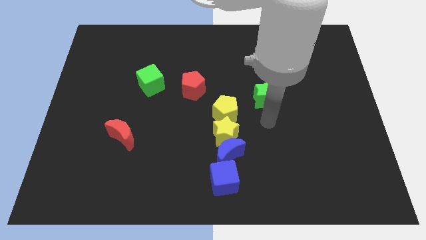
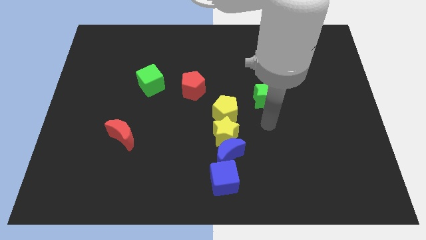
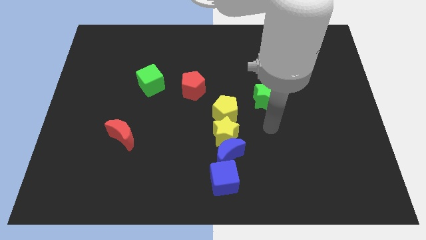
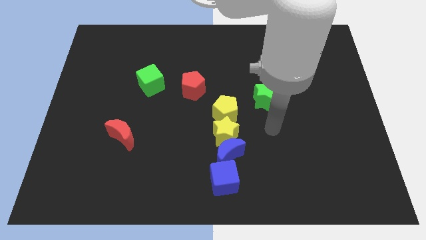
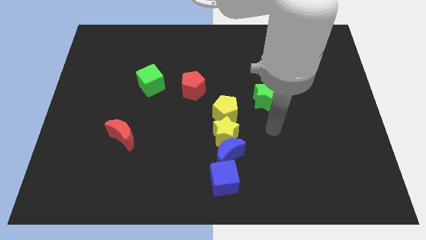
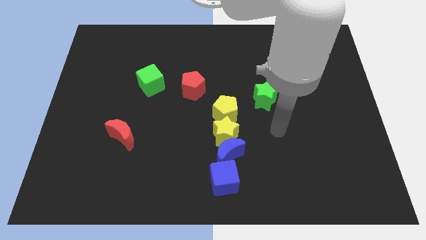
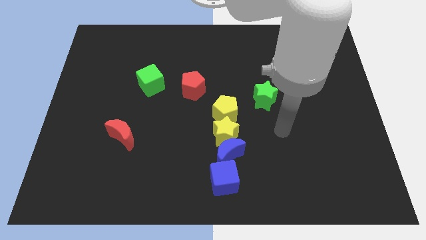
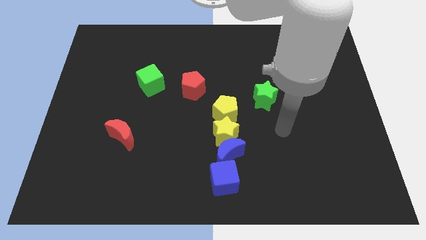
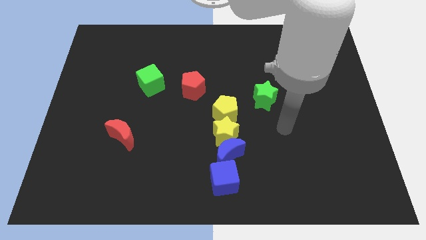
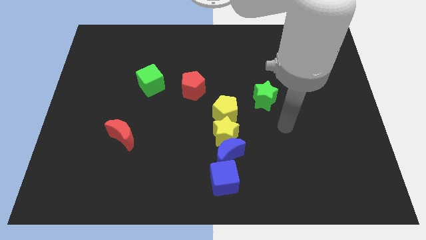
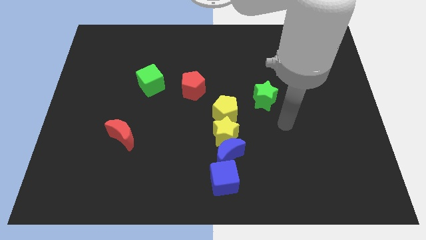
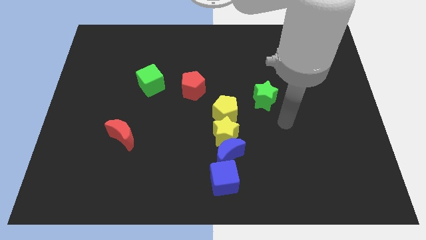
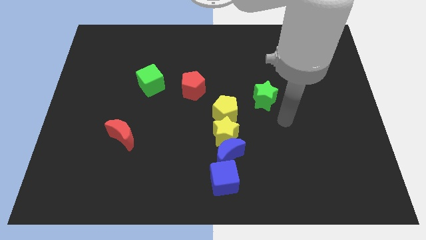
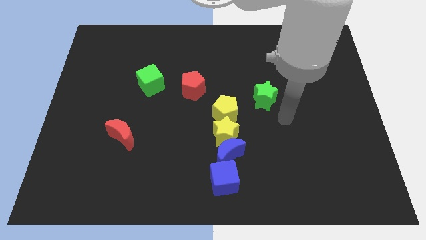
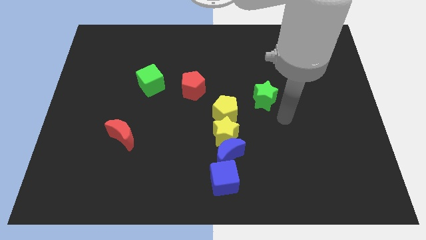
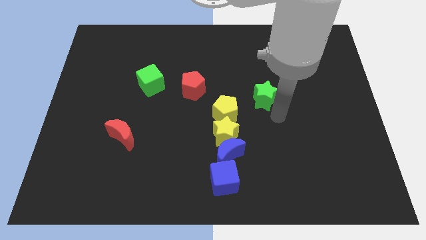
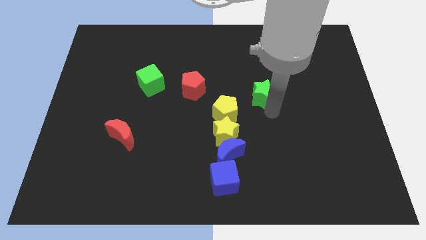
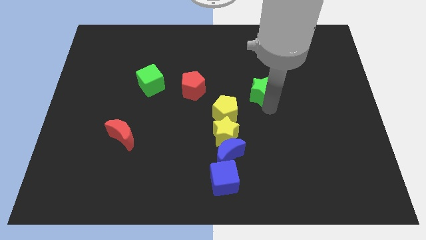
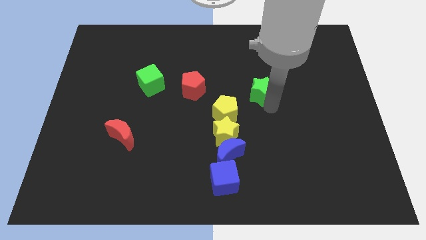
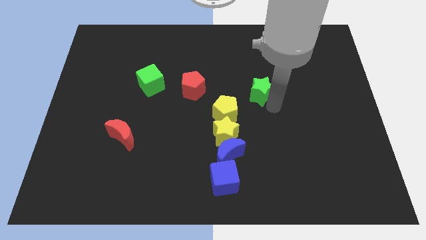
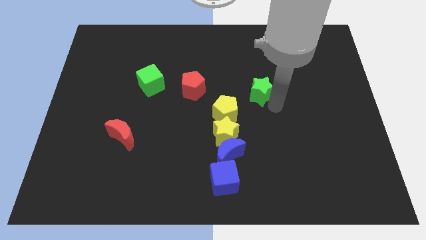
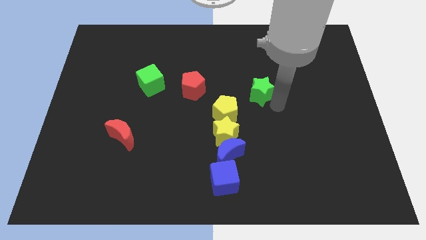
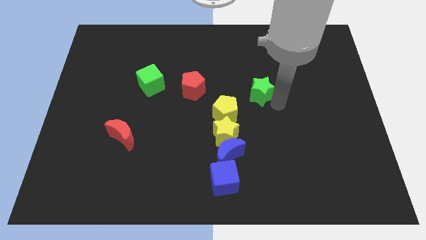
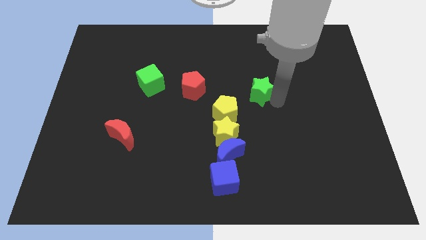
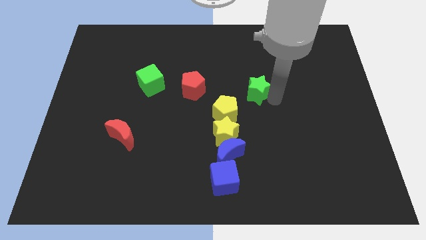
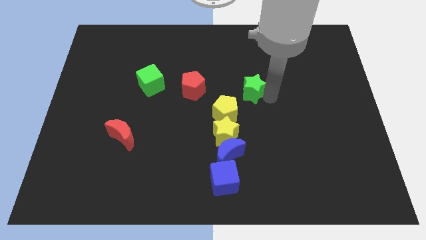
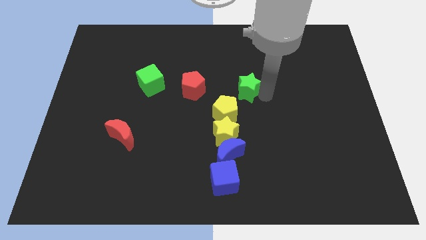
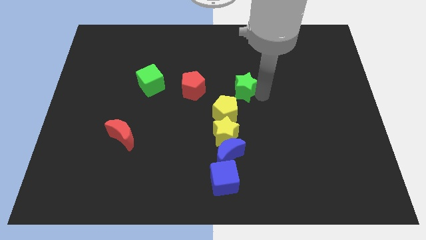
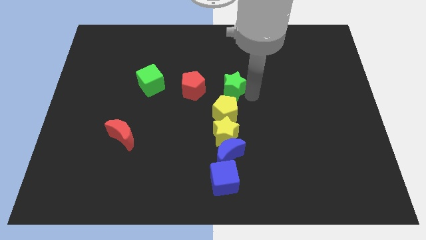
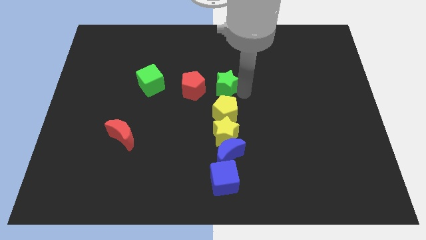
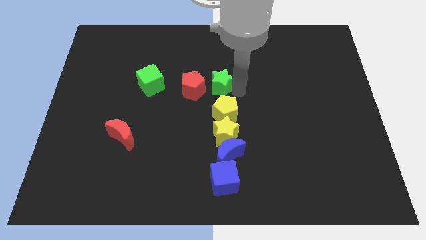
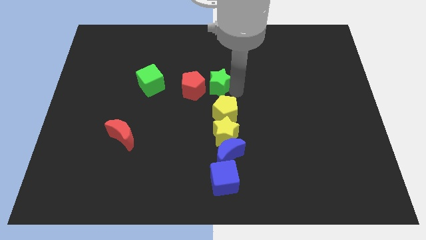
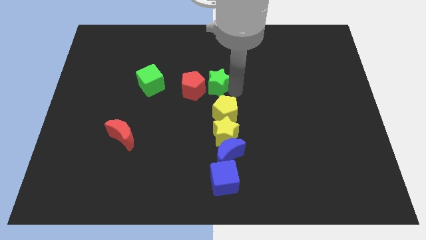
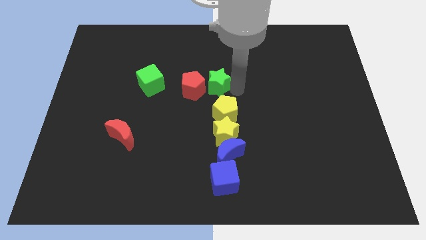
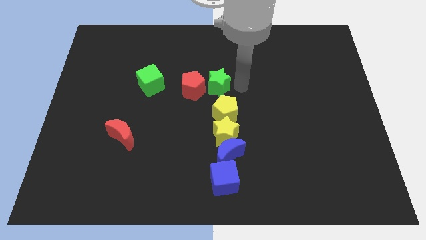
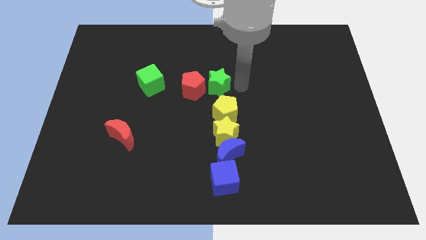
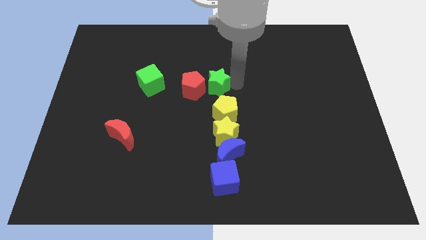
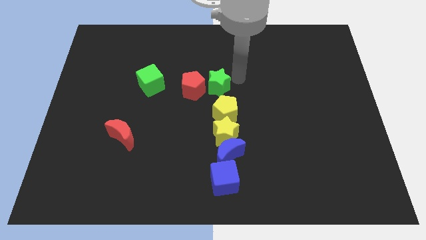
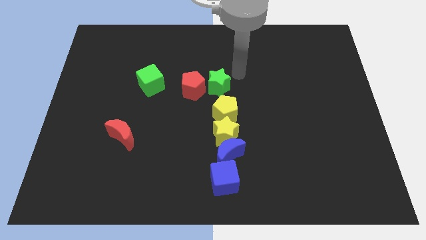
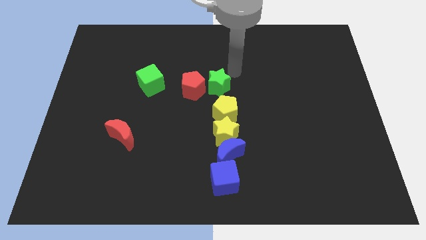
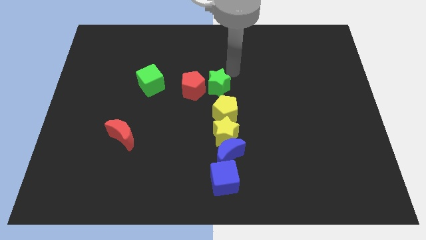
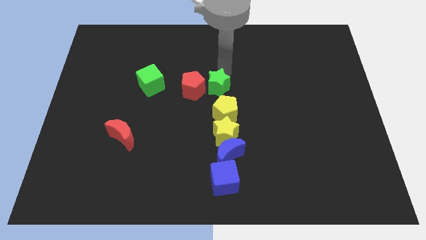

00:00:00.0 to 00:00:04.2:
move the green star to the right side of the red pentagon

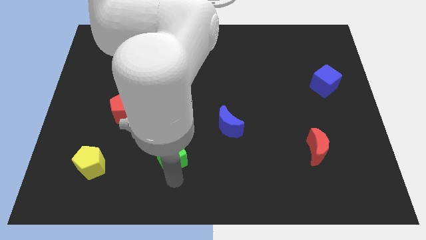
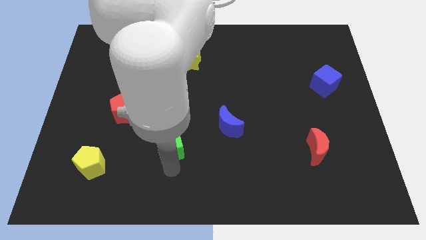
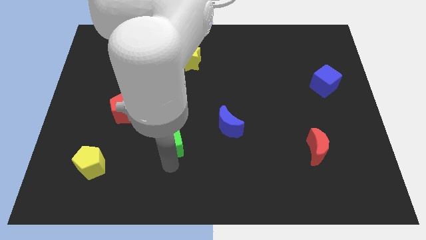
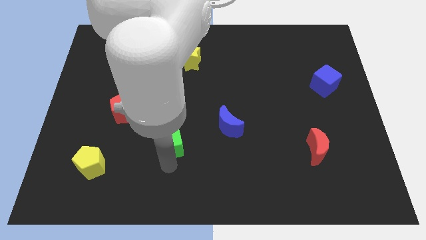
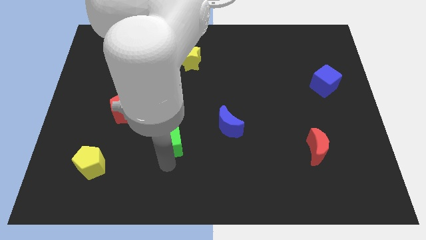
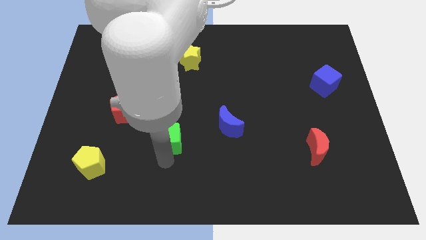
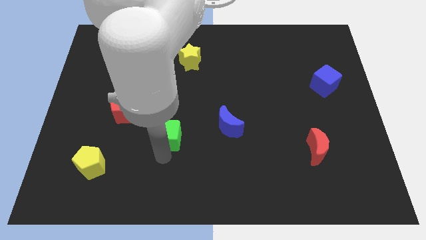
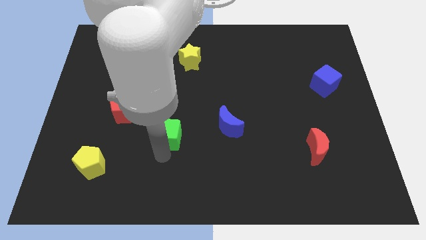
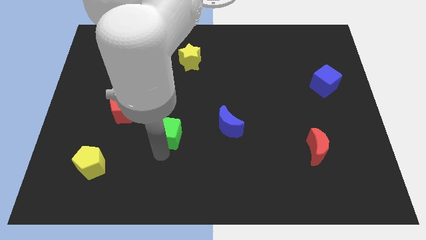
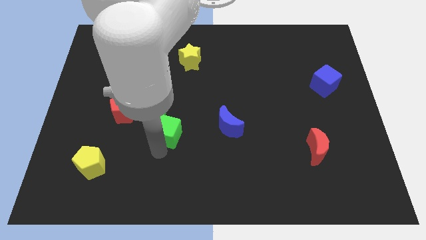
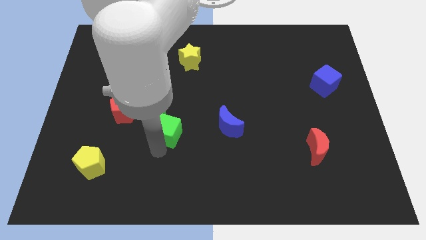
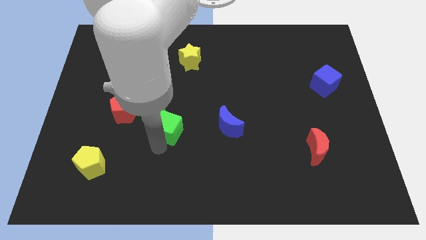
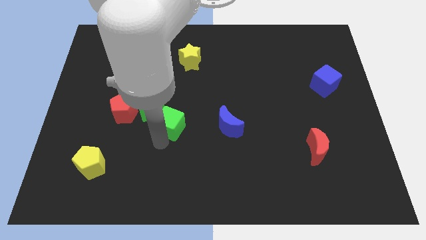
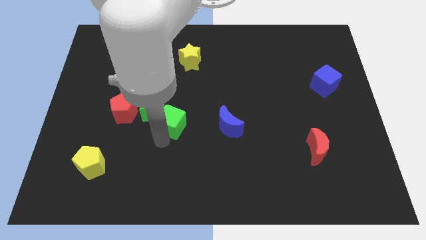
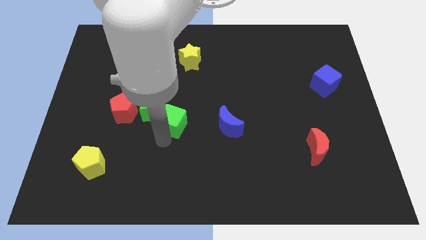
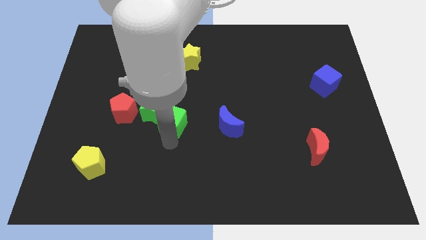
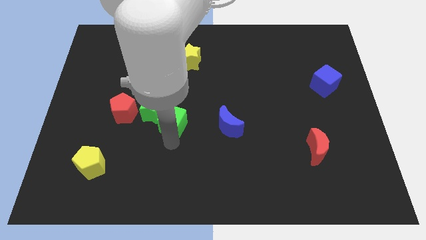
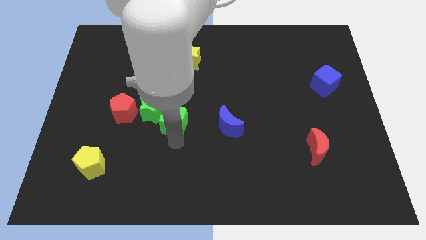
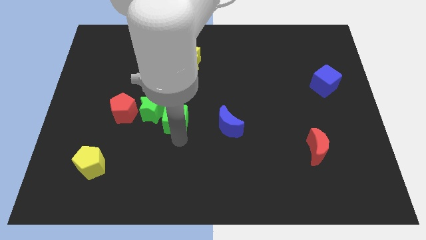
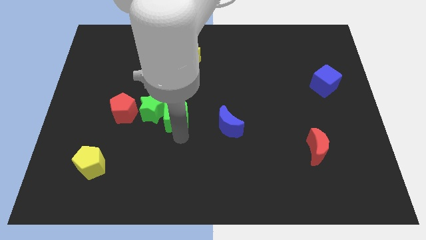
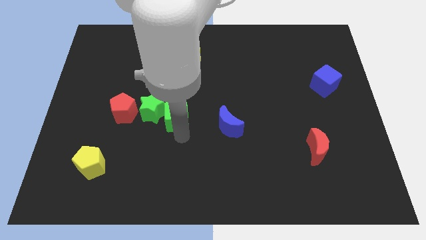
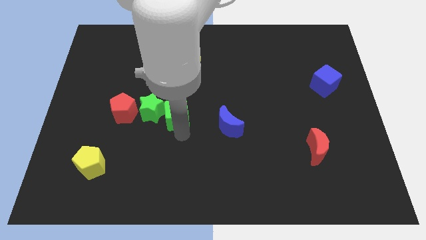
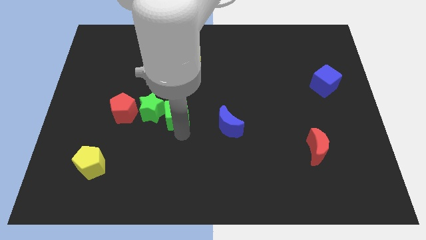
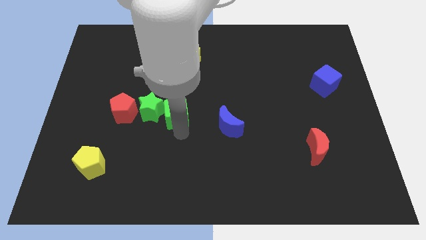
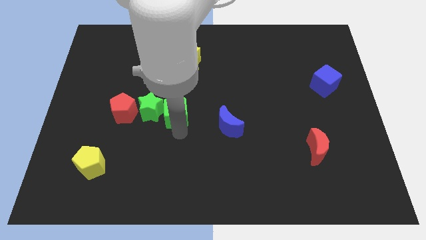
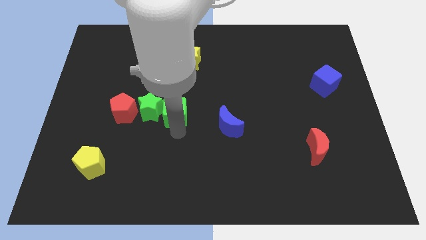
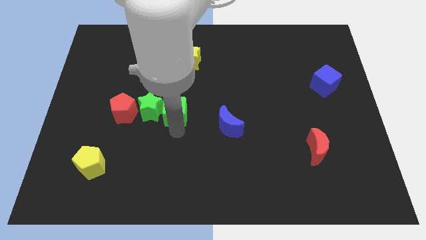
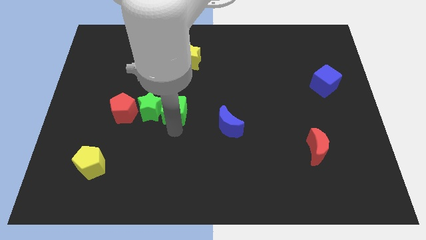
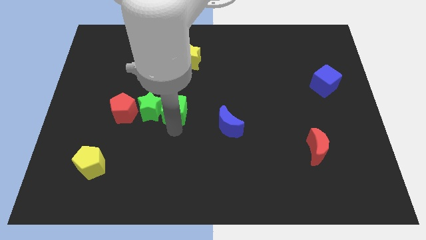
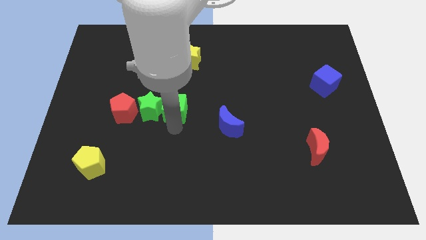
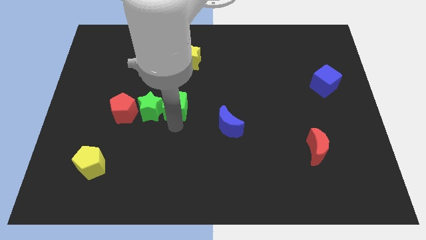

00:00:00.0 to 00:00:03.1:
make the green cube touch the right side of the green star

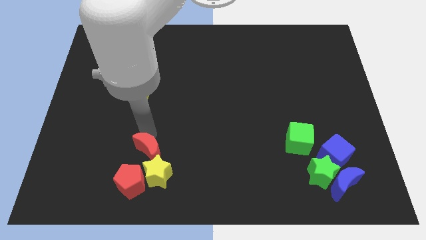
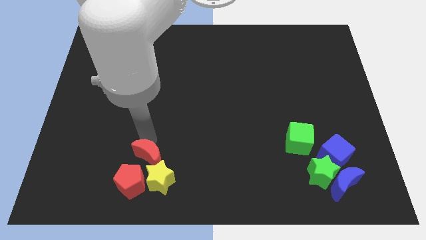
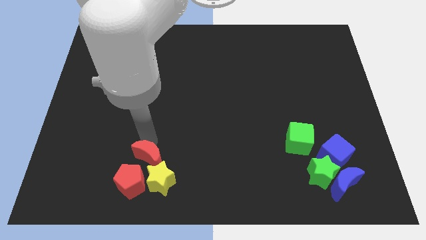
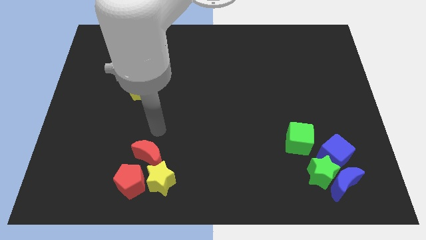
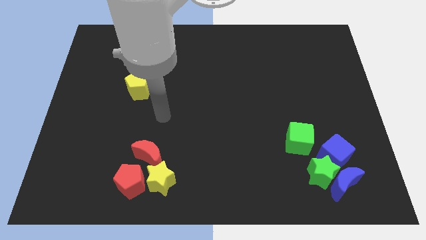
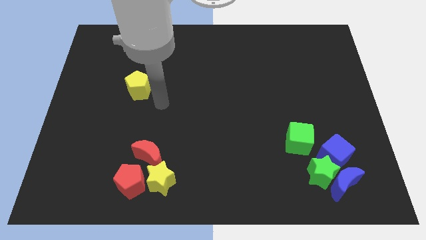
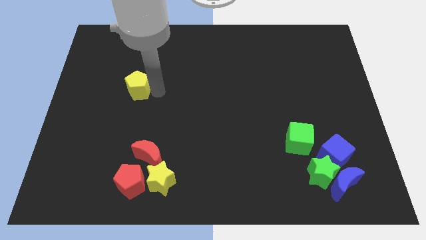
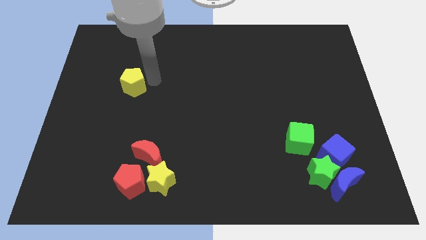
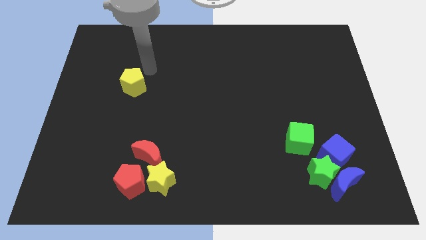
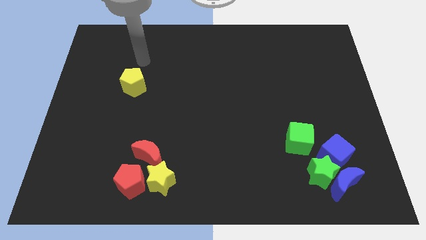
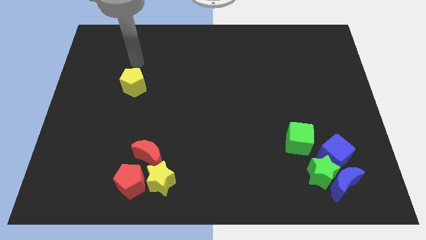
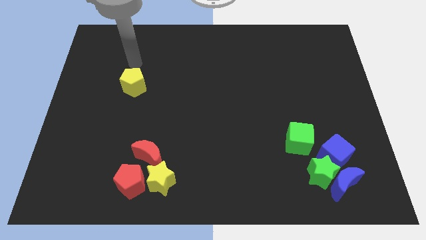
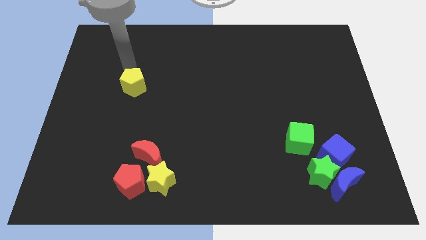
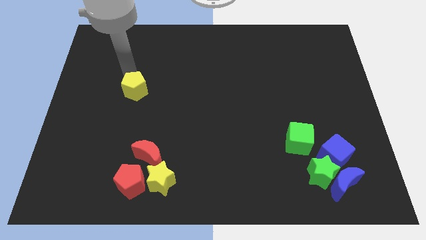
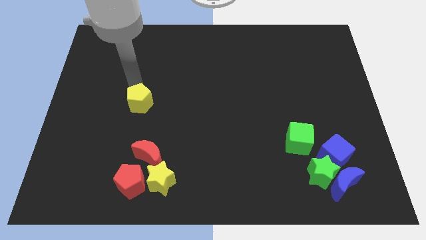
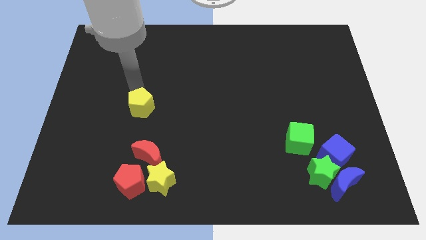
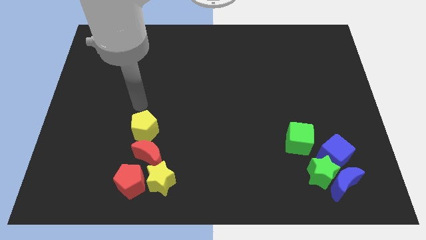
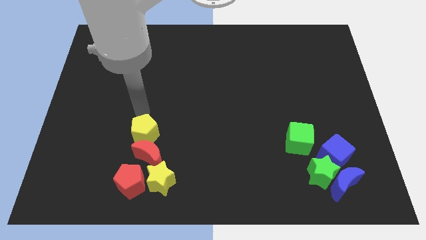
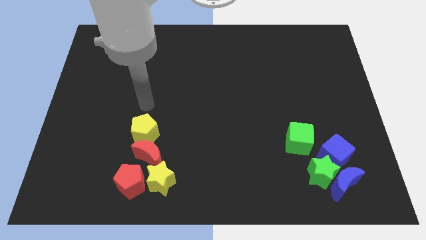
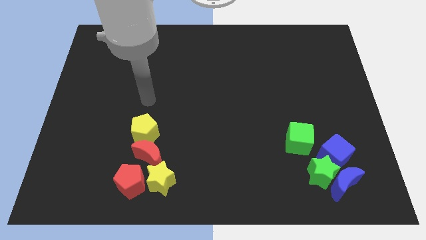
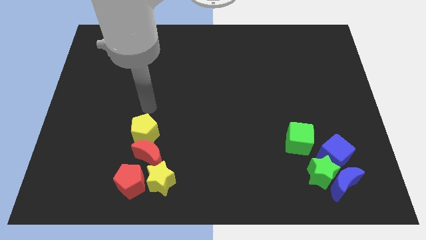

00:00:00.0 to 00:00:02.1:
push the yellow pentagon towards the top side of the red crescent
